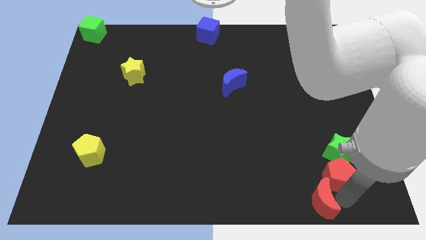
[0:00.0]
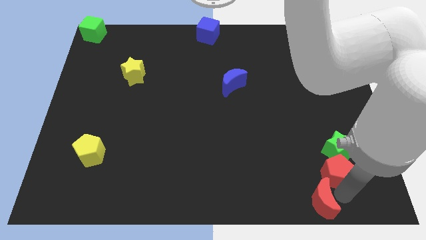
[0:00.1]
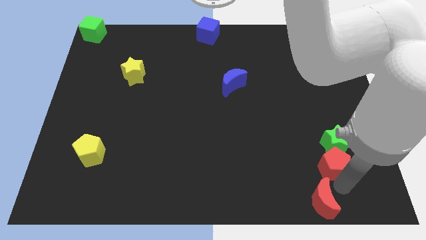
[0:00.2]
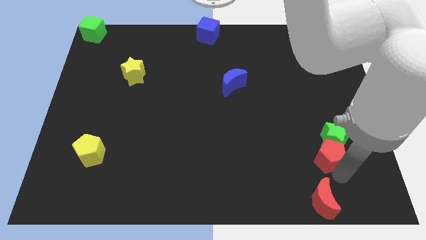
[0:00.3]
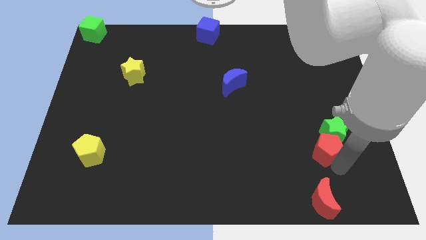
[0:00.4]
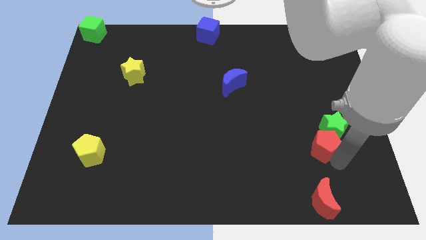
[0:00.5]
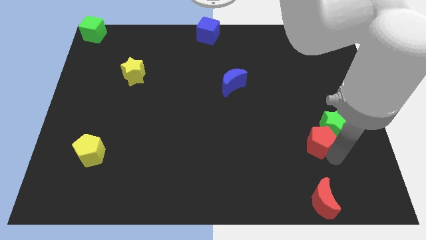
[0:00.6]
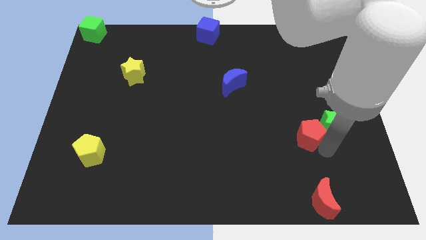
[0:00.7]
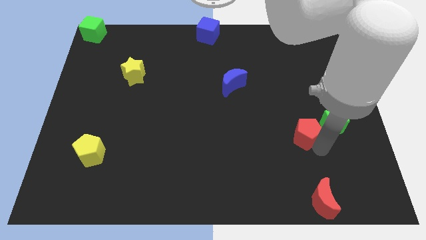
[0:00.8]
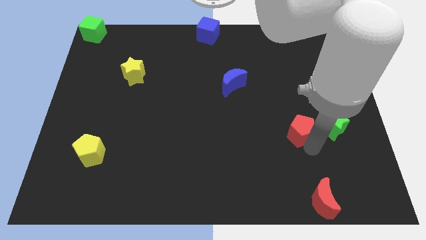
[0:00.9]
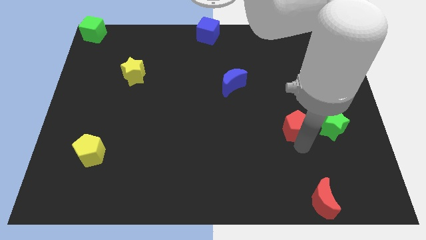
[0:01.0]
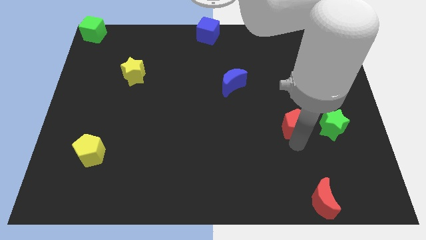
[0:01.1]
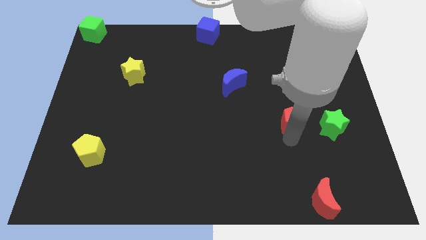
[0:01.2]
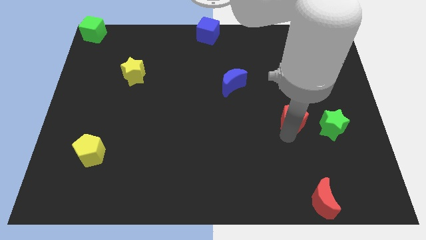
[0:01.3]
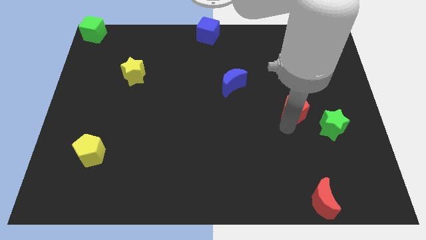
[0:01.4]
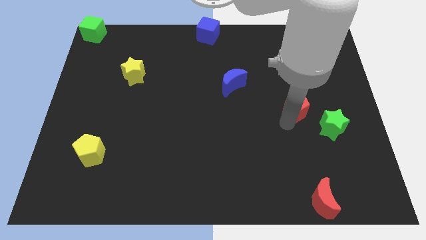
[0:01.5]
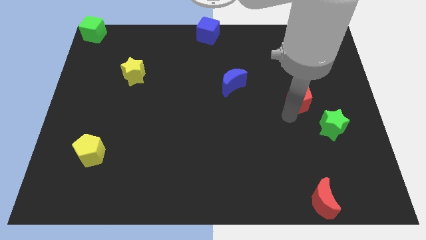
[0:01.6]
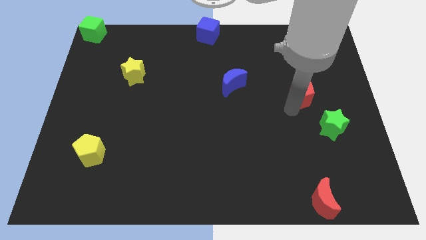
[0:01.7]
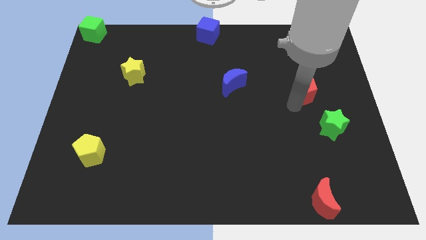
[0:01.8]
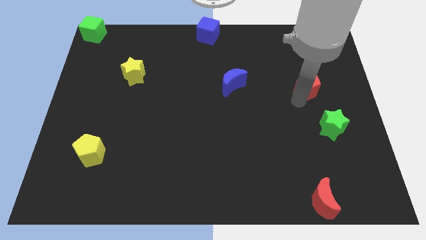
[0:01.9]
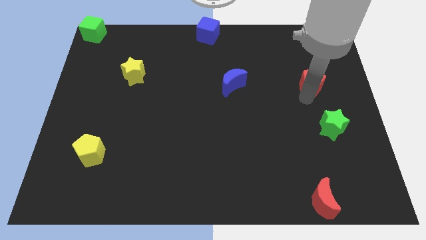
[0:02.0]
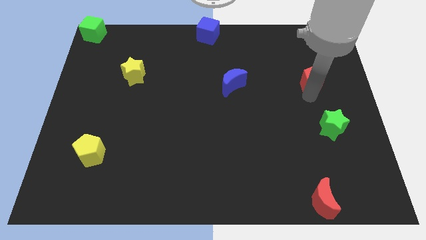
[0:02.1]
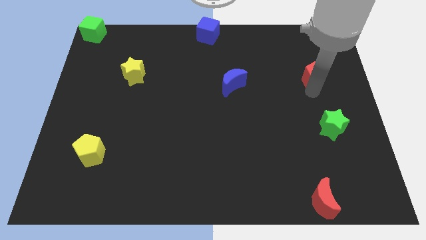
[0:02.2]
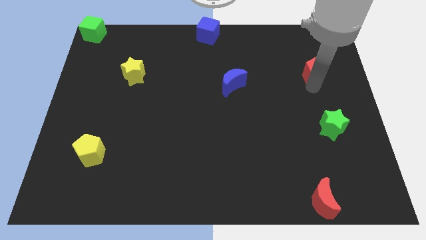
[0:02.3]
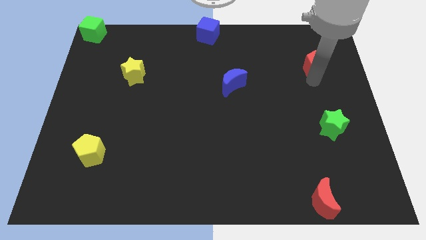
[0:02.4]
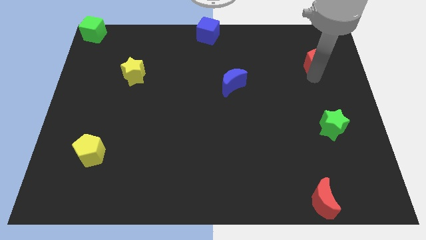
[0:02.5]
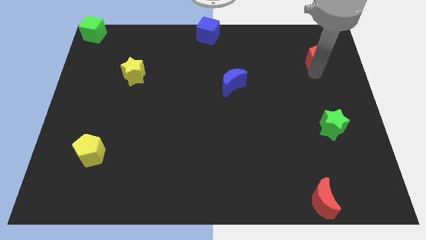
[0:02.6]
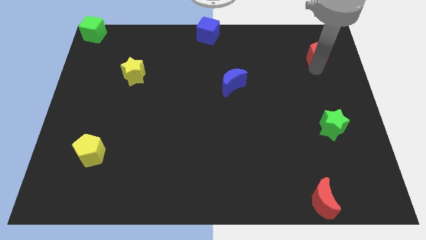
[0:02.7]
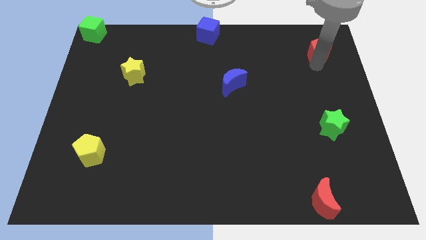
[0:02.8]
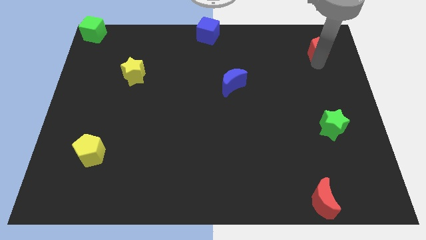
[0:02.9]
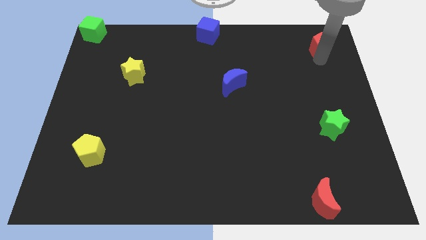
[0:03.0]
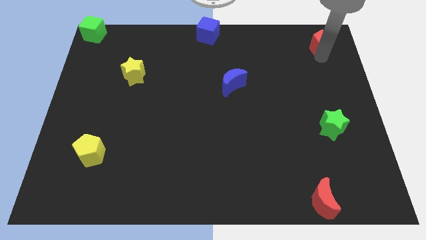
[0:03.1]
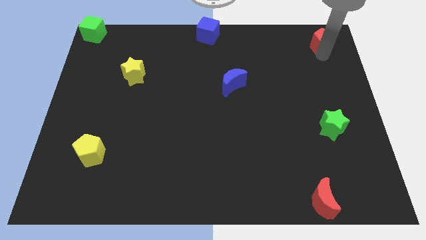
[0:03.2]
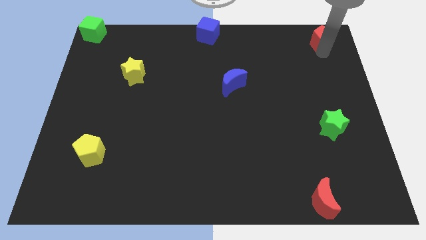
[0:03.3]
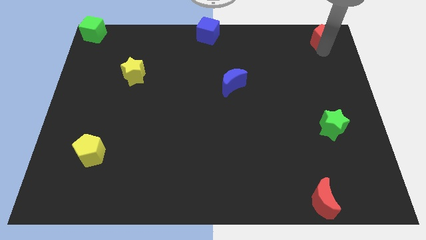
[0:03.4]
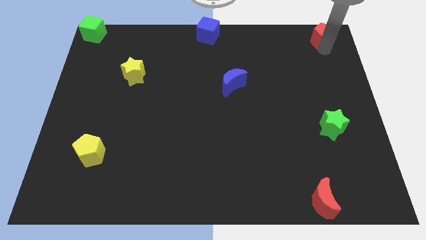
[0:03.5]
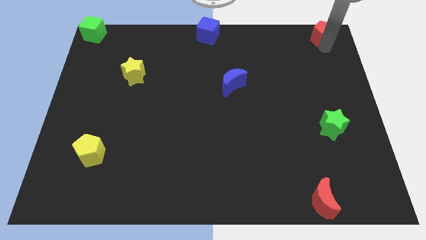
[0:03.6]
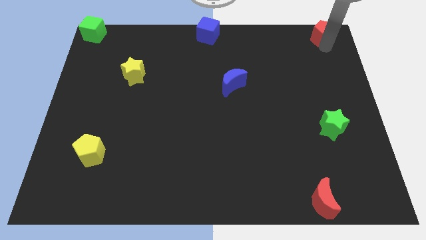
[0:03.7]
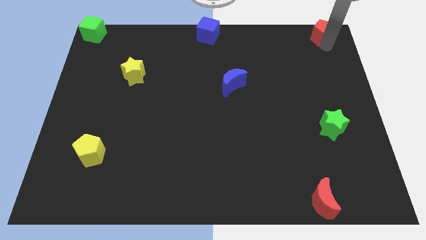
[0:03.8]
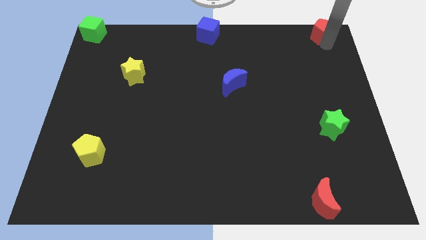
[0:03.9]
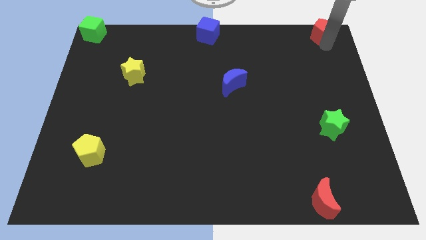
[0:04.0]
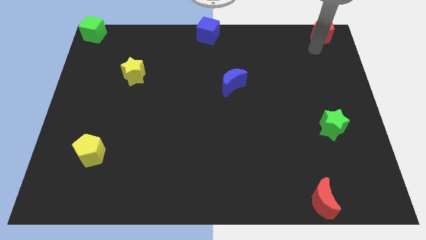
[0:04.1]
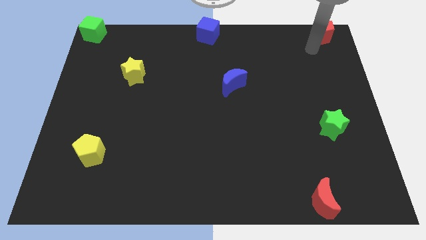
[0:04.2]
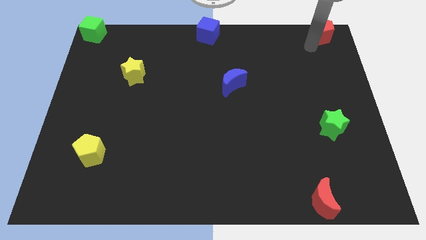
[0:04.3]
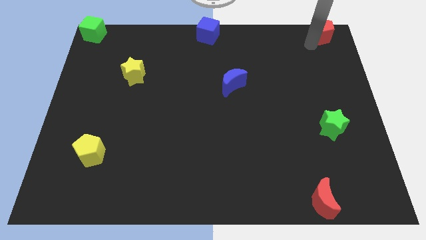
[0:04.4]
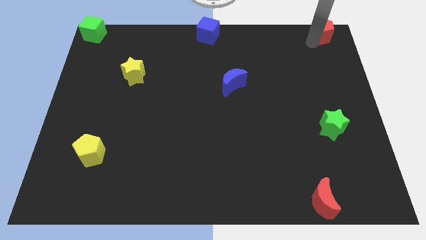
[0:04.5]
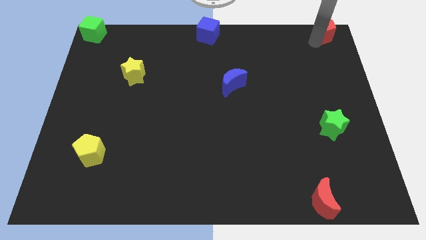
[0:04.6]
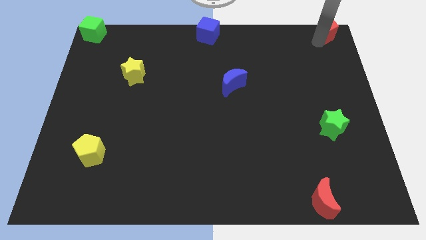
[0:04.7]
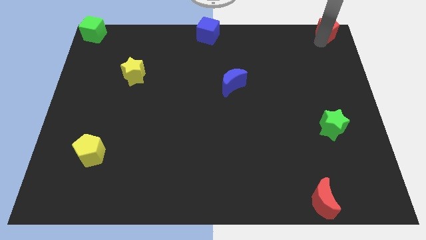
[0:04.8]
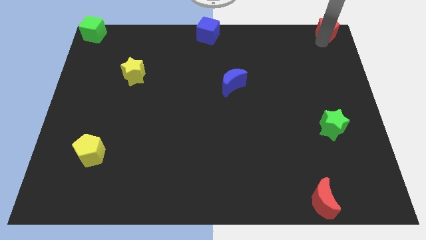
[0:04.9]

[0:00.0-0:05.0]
push the red pentagon to the top right

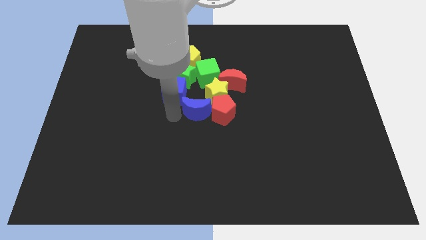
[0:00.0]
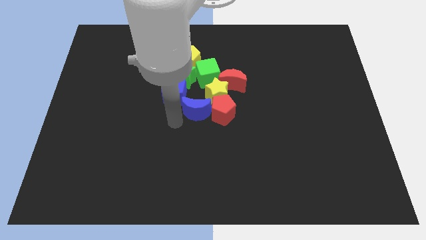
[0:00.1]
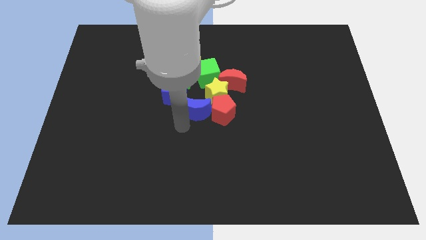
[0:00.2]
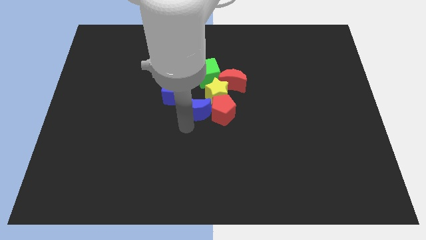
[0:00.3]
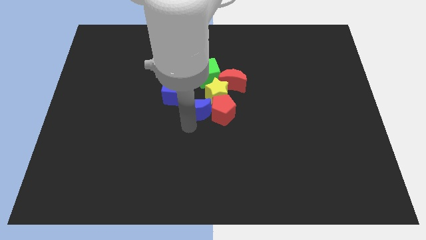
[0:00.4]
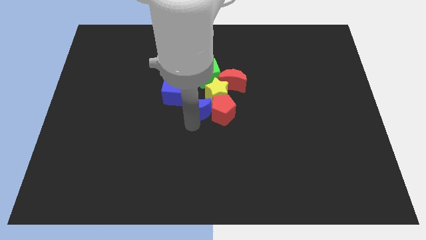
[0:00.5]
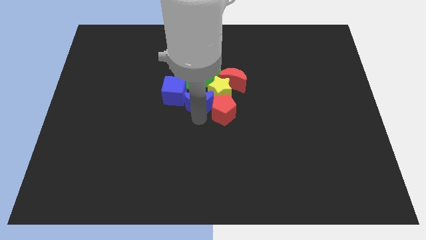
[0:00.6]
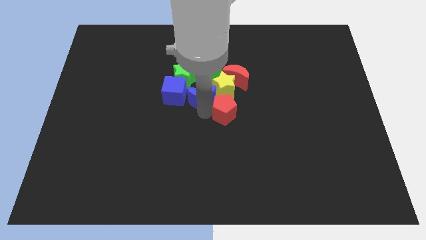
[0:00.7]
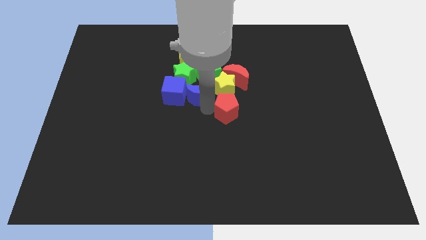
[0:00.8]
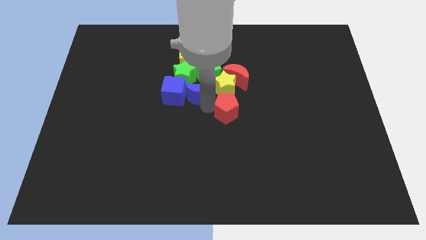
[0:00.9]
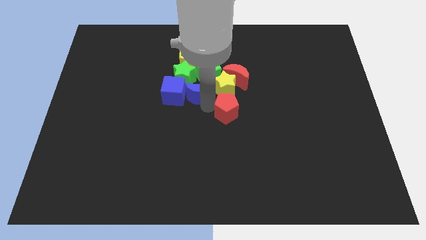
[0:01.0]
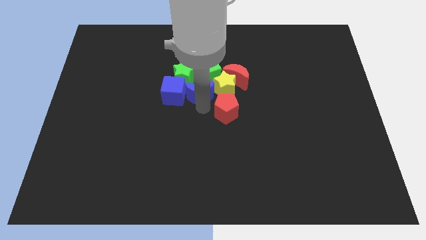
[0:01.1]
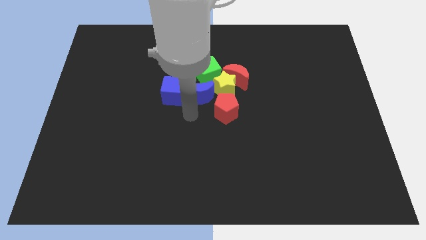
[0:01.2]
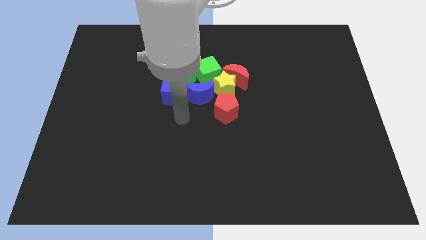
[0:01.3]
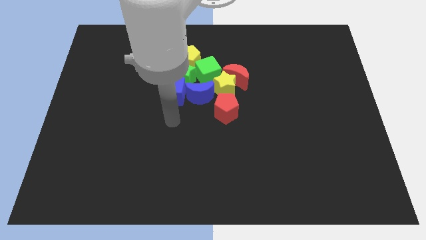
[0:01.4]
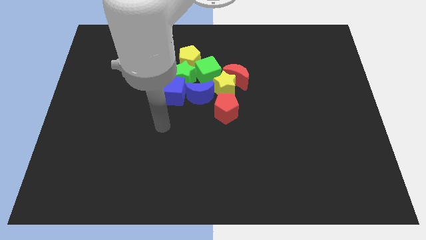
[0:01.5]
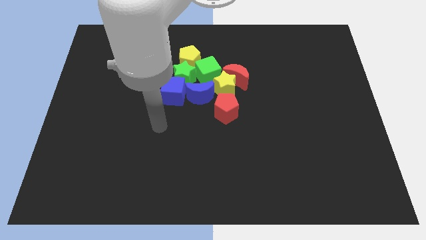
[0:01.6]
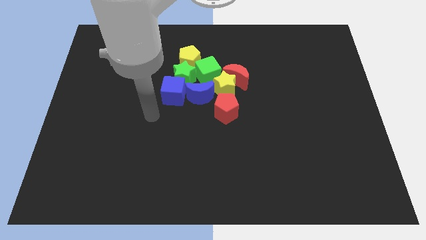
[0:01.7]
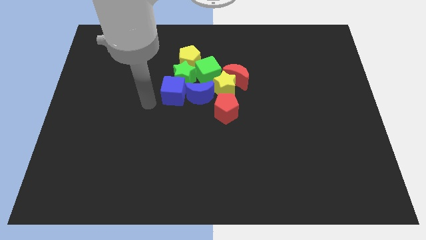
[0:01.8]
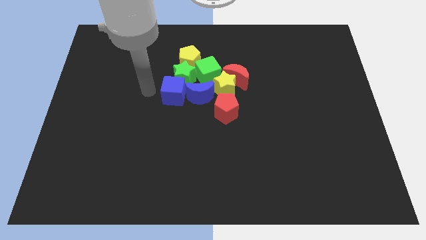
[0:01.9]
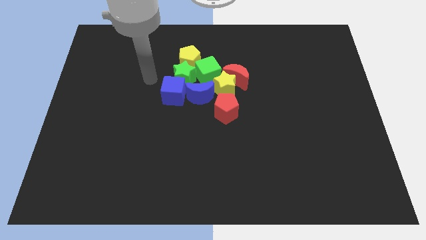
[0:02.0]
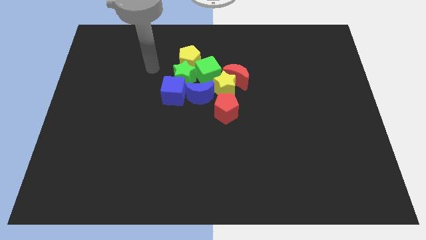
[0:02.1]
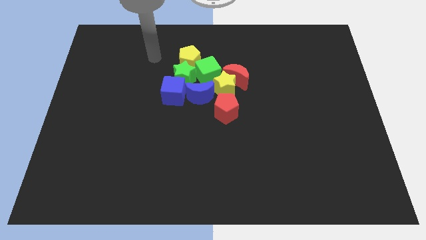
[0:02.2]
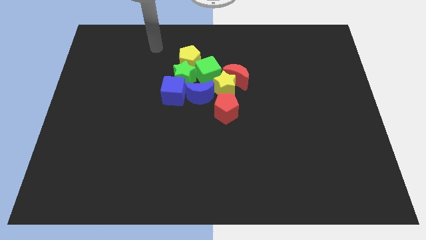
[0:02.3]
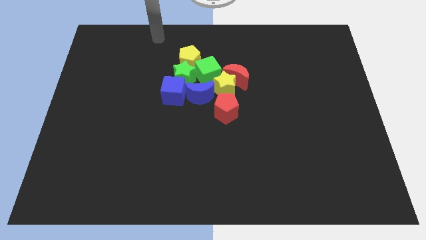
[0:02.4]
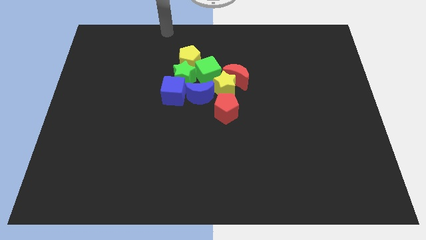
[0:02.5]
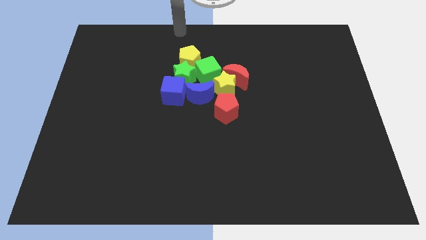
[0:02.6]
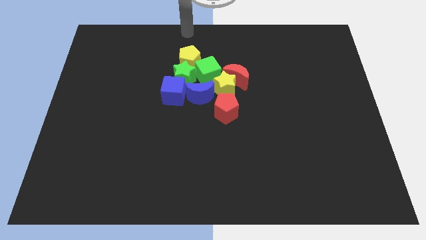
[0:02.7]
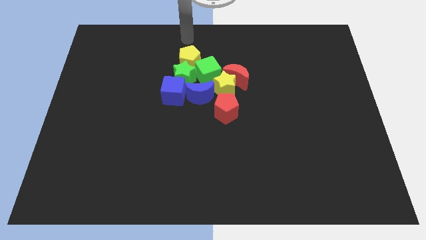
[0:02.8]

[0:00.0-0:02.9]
push the blue crescent in between the blue cube and the yellow star

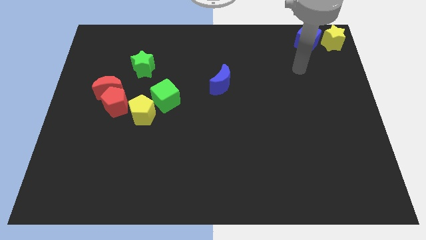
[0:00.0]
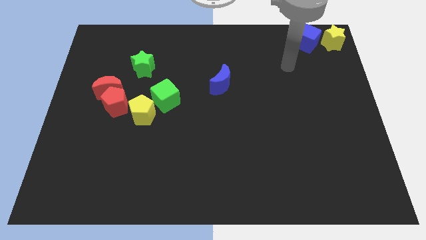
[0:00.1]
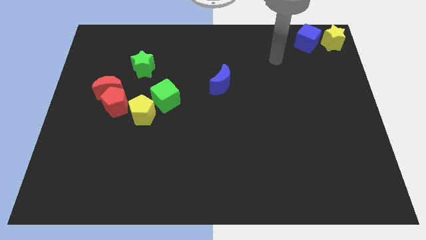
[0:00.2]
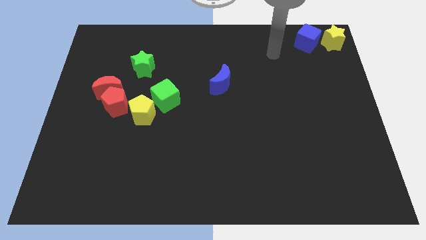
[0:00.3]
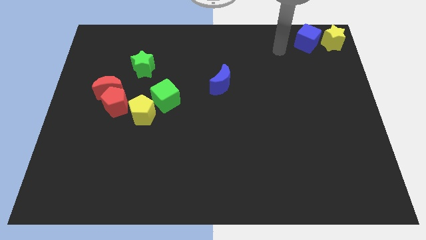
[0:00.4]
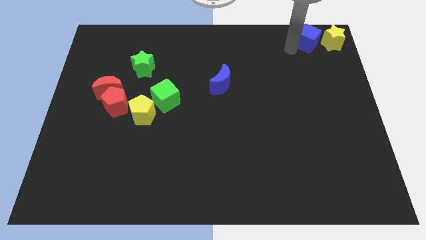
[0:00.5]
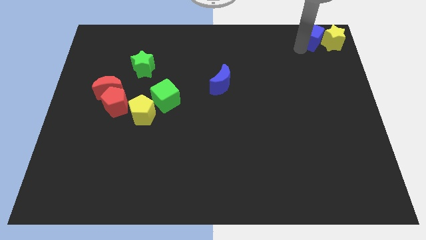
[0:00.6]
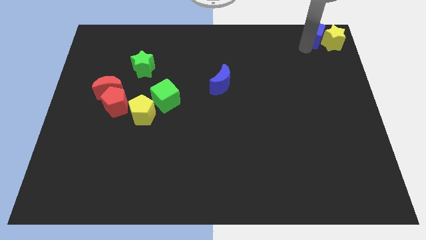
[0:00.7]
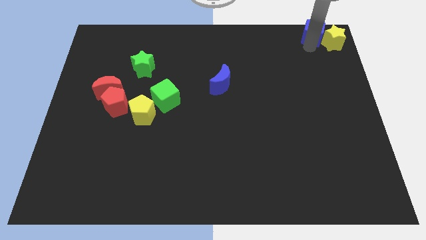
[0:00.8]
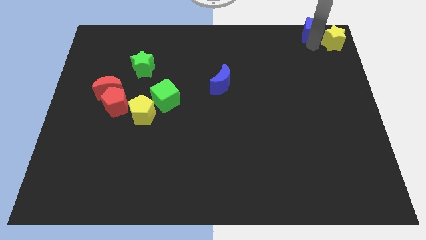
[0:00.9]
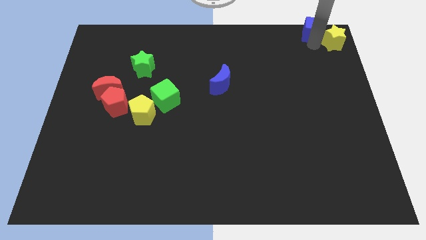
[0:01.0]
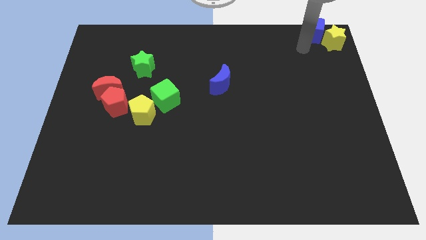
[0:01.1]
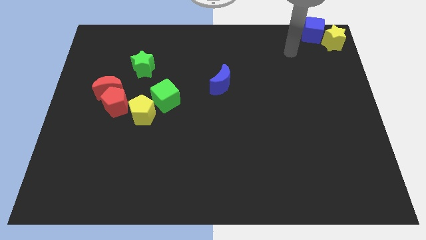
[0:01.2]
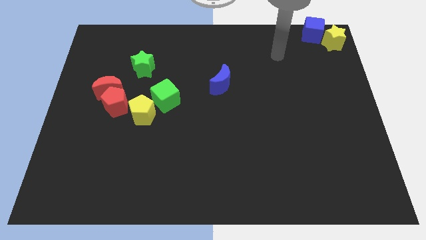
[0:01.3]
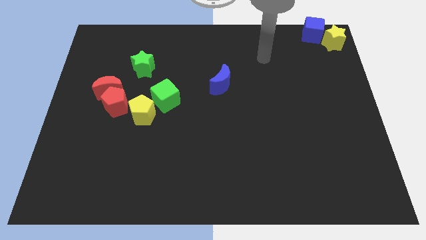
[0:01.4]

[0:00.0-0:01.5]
put the blue cube at the top left of the yellow star
